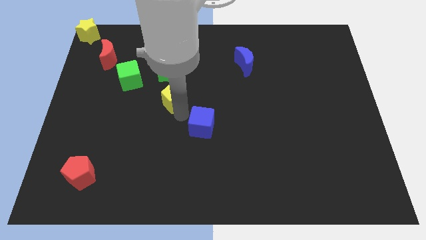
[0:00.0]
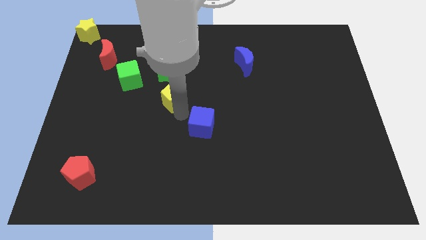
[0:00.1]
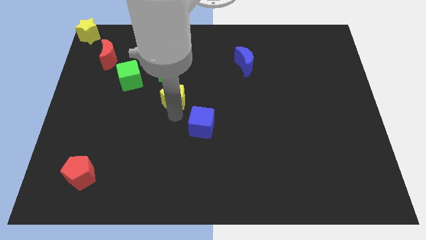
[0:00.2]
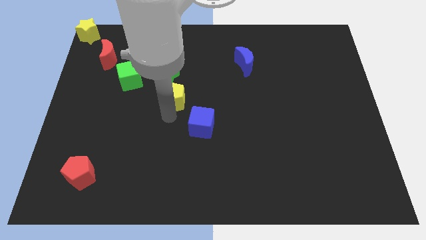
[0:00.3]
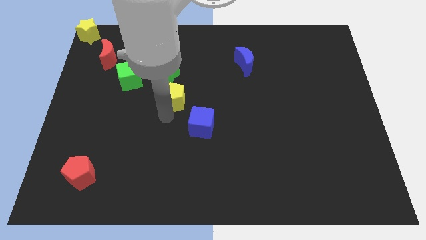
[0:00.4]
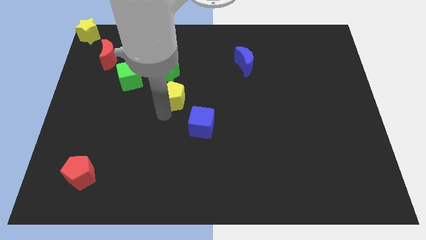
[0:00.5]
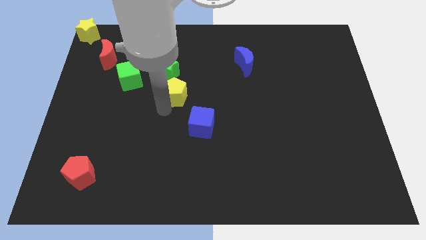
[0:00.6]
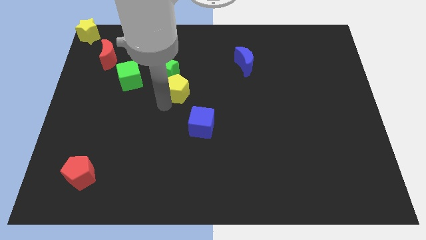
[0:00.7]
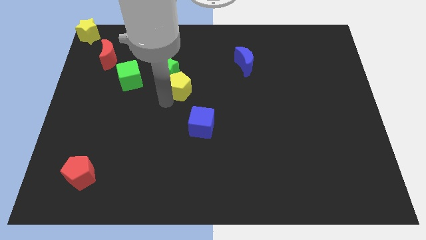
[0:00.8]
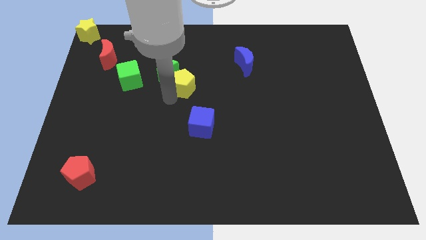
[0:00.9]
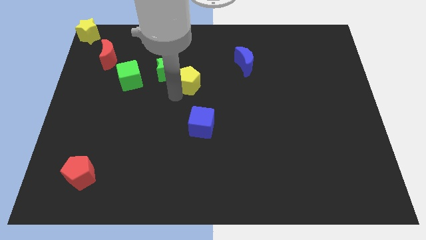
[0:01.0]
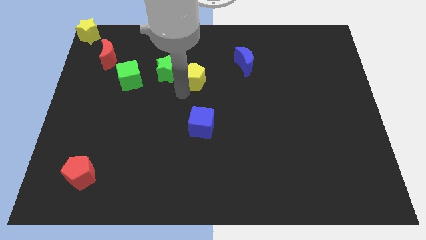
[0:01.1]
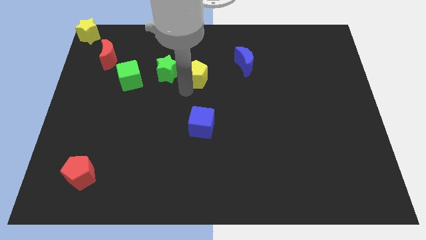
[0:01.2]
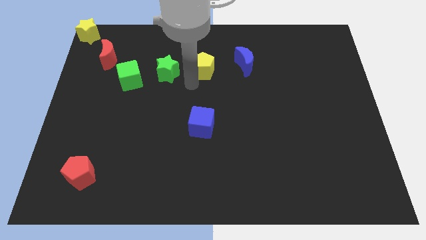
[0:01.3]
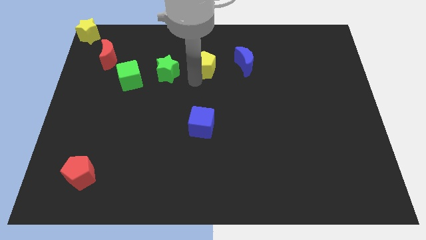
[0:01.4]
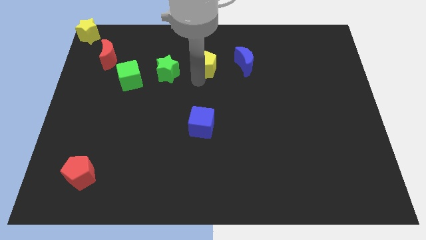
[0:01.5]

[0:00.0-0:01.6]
move the yellow pentagon parallel to the green star

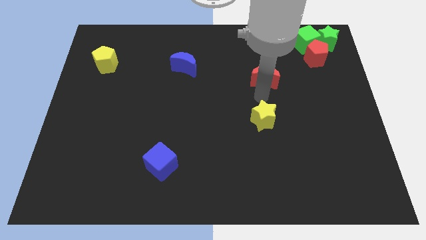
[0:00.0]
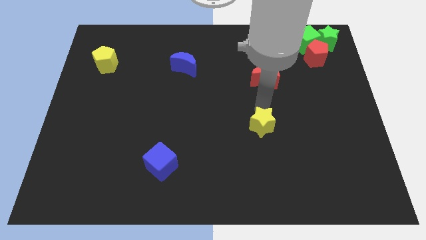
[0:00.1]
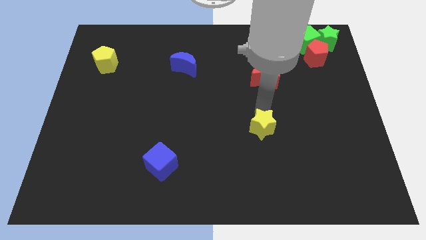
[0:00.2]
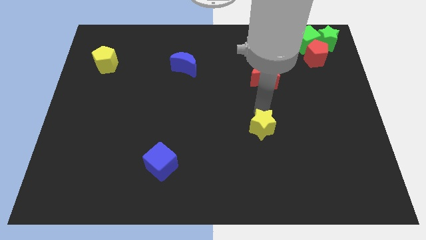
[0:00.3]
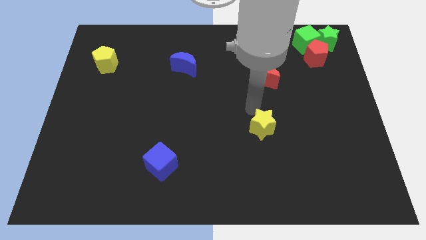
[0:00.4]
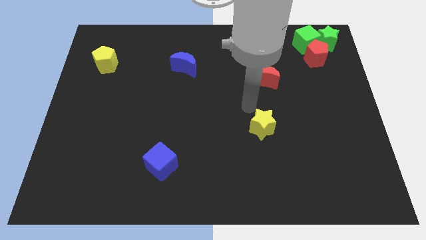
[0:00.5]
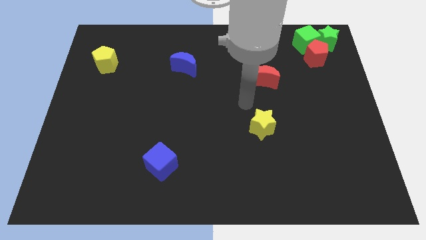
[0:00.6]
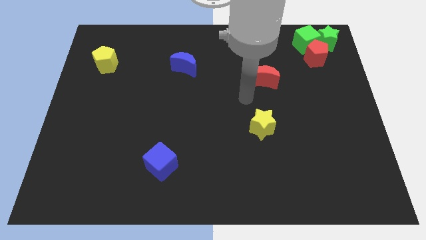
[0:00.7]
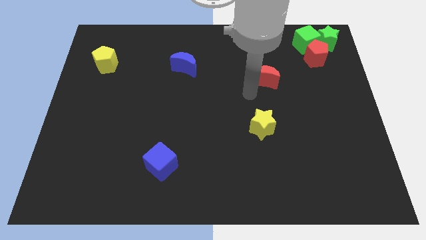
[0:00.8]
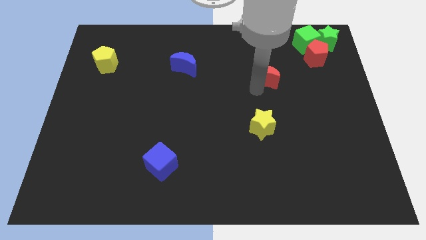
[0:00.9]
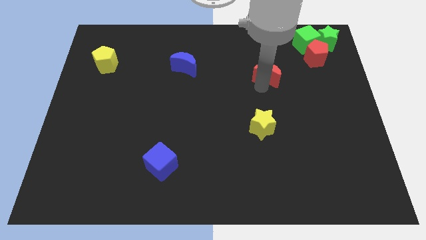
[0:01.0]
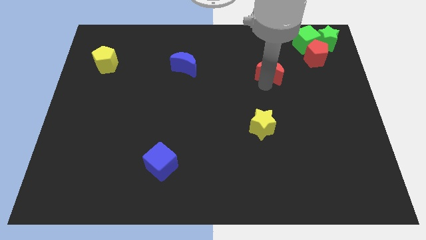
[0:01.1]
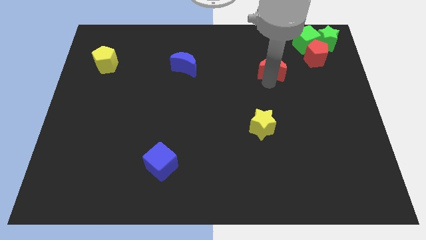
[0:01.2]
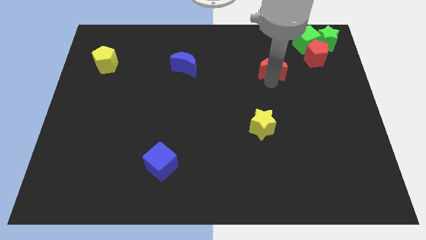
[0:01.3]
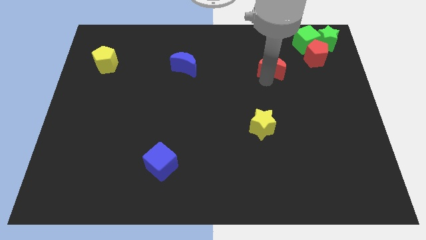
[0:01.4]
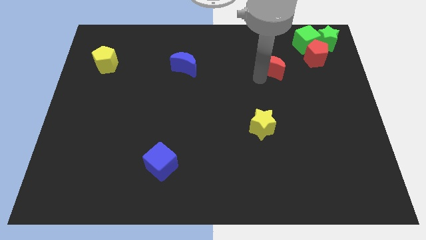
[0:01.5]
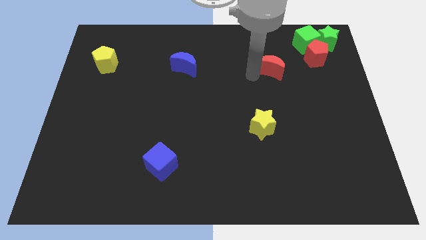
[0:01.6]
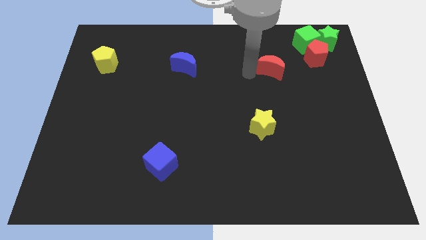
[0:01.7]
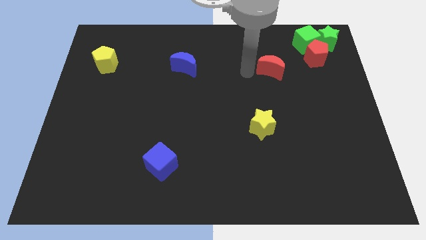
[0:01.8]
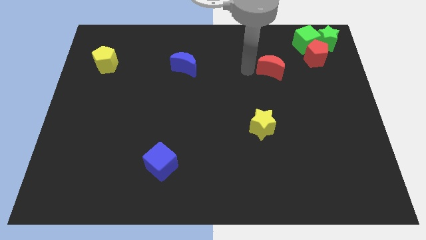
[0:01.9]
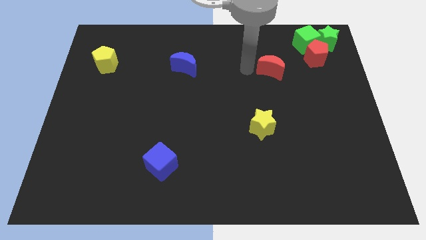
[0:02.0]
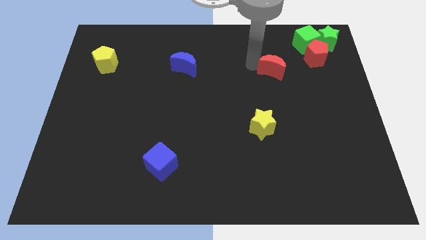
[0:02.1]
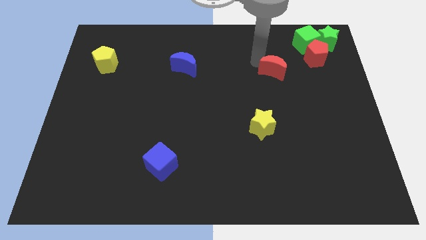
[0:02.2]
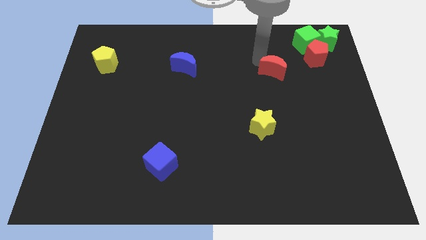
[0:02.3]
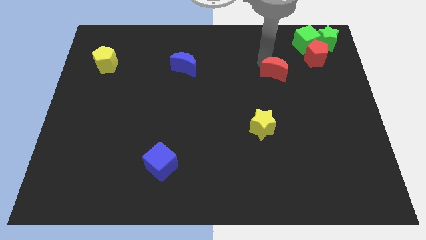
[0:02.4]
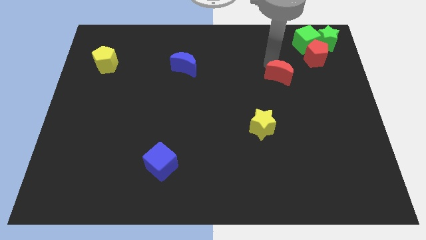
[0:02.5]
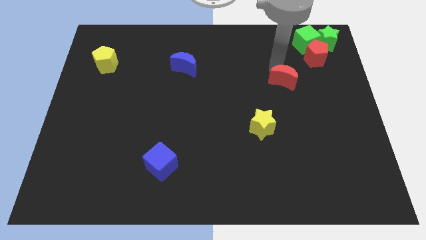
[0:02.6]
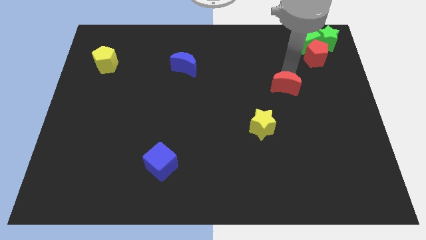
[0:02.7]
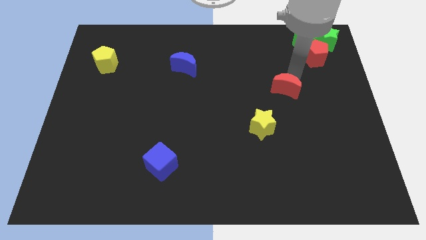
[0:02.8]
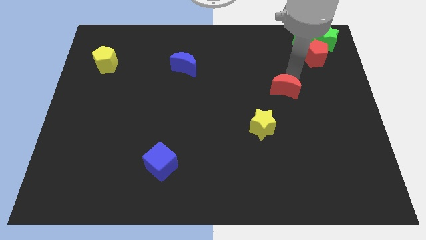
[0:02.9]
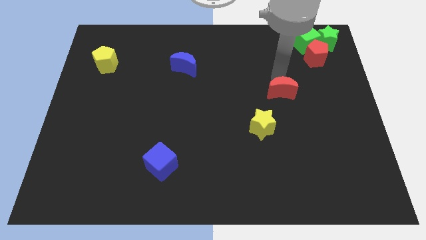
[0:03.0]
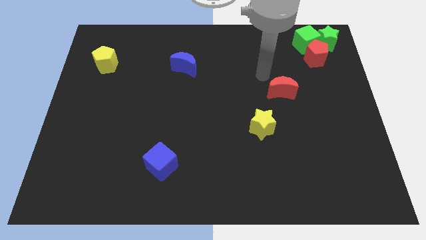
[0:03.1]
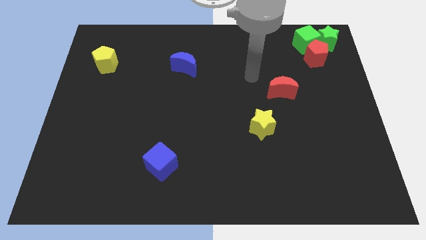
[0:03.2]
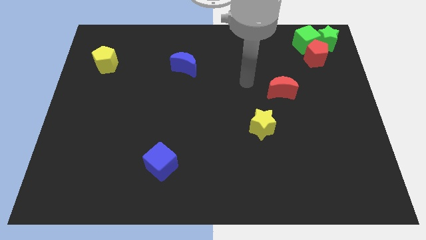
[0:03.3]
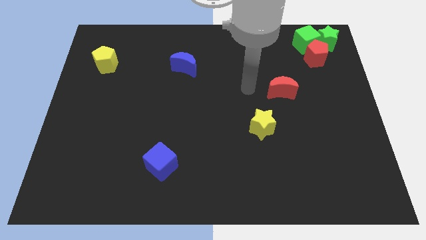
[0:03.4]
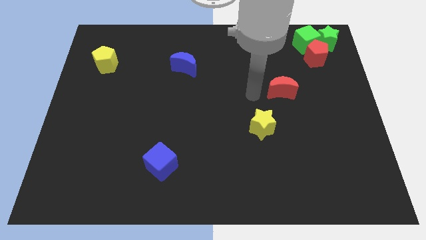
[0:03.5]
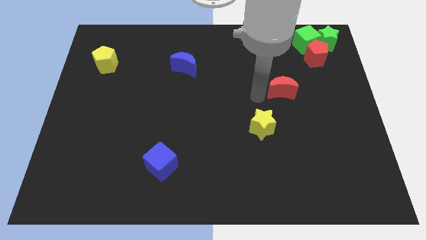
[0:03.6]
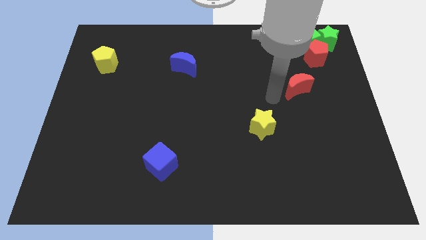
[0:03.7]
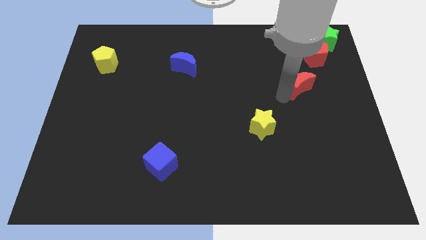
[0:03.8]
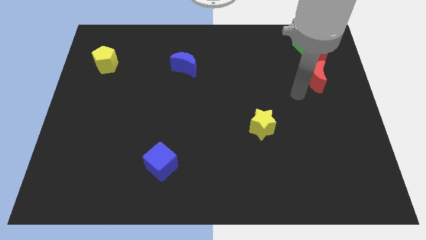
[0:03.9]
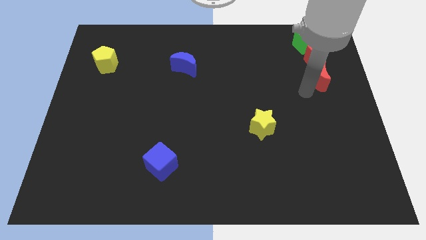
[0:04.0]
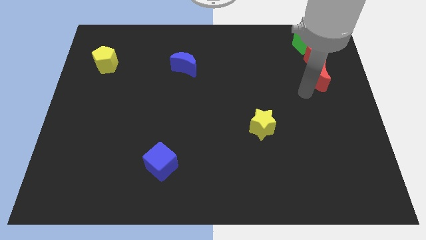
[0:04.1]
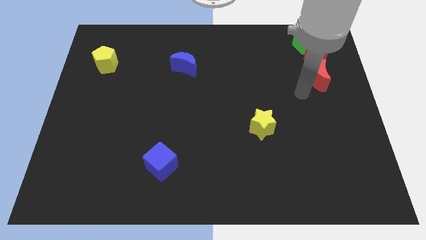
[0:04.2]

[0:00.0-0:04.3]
place the red moon to the bottom of the red pentagon

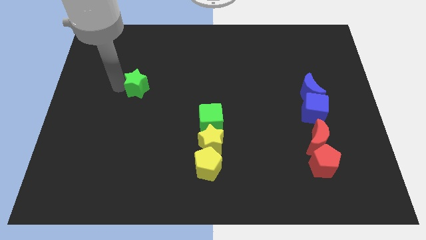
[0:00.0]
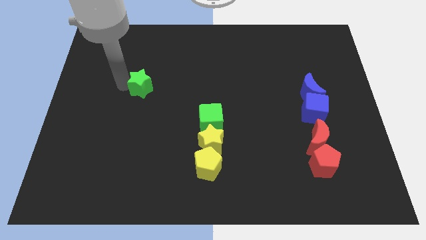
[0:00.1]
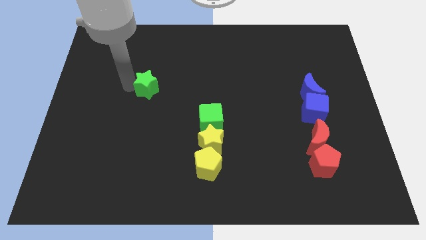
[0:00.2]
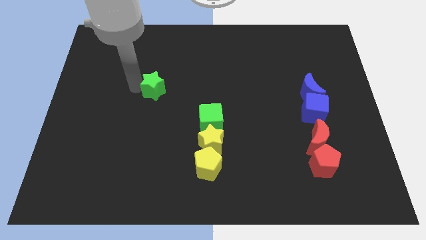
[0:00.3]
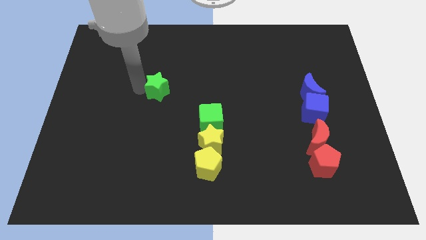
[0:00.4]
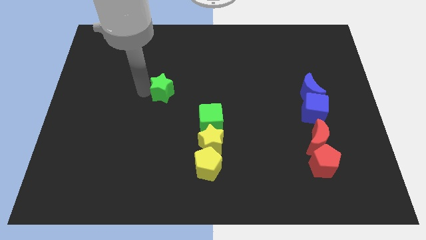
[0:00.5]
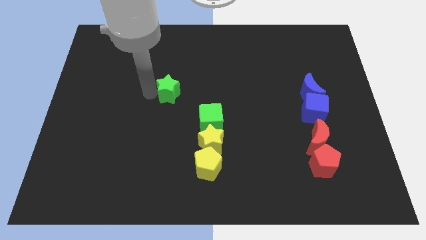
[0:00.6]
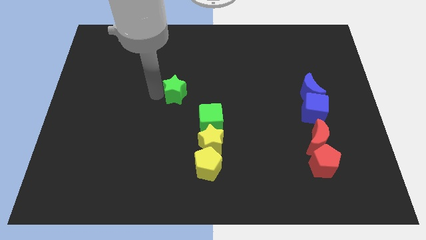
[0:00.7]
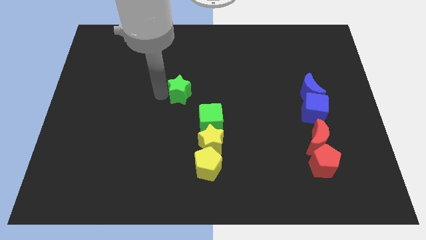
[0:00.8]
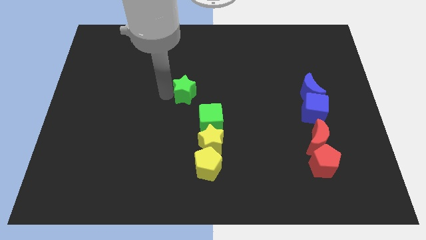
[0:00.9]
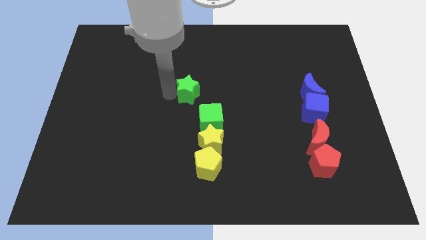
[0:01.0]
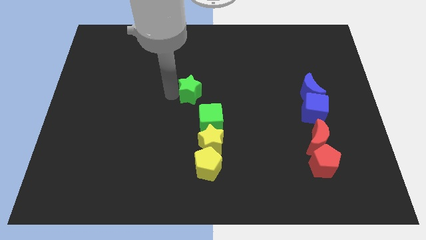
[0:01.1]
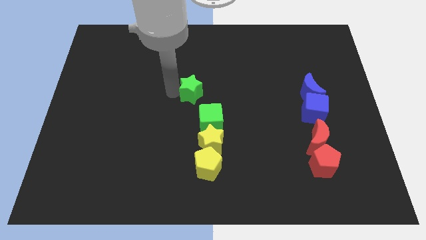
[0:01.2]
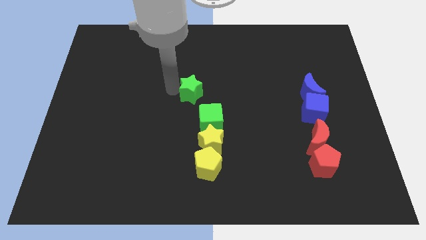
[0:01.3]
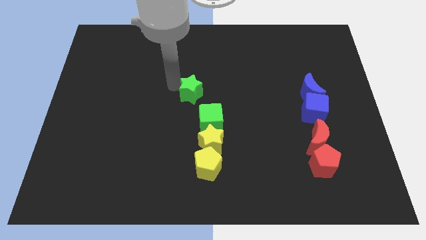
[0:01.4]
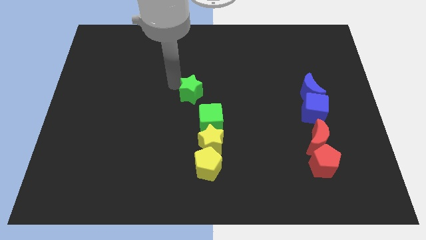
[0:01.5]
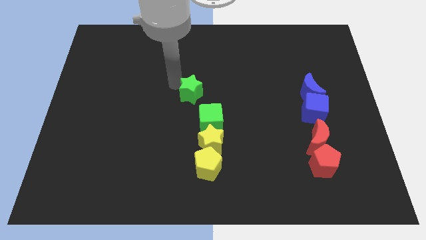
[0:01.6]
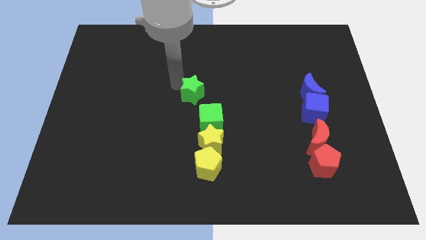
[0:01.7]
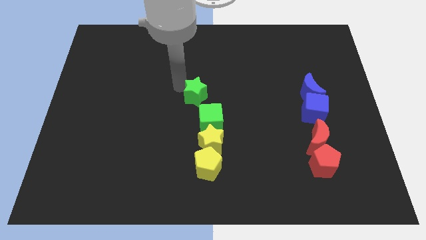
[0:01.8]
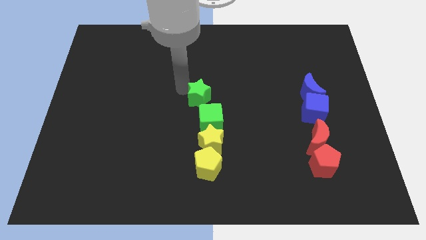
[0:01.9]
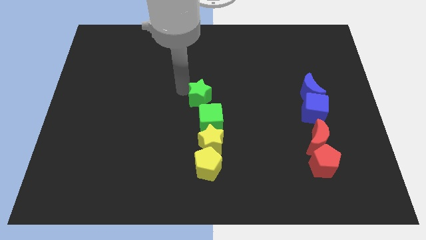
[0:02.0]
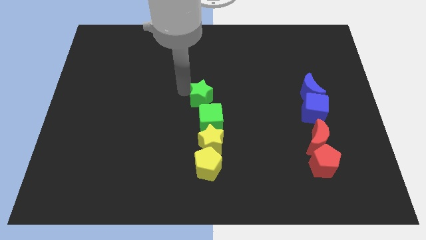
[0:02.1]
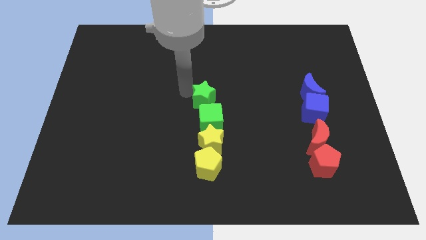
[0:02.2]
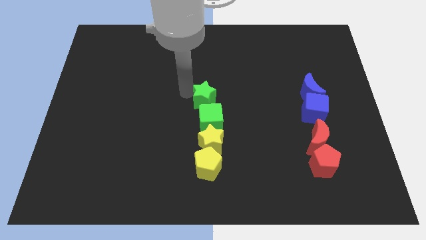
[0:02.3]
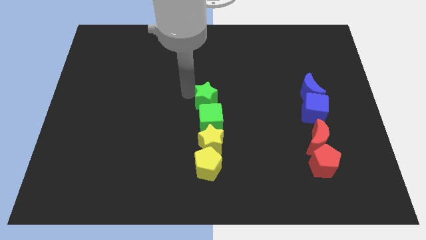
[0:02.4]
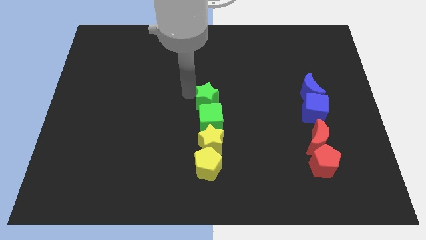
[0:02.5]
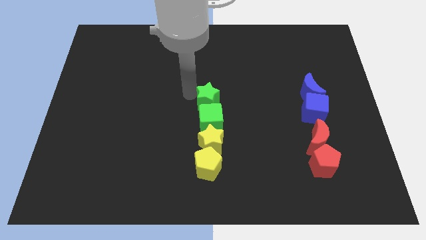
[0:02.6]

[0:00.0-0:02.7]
move the green star towards up side of the green cube

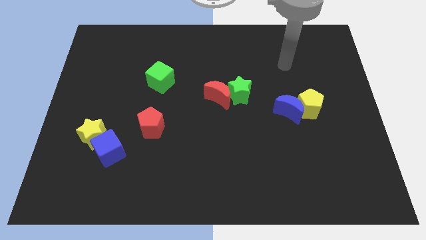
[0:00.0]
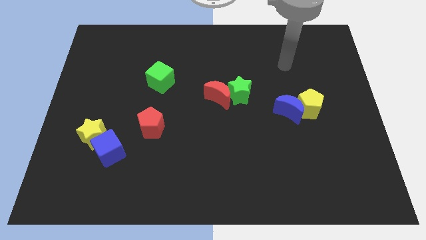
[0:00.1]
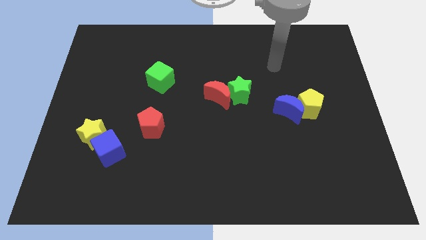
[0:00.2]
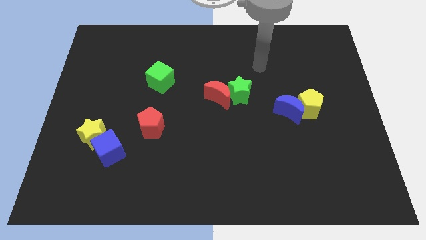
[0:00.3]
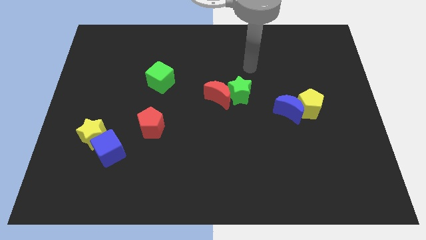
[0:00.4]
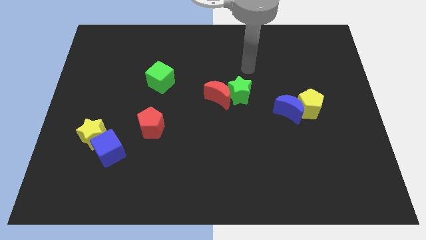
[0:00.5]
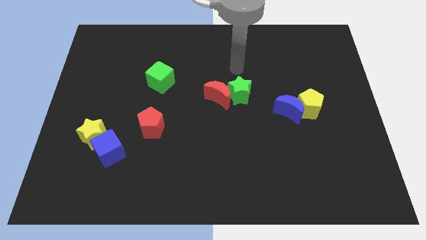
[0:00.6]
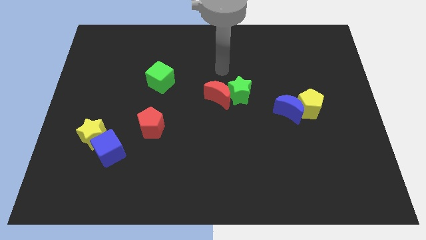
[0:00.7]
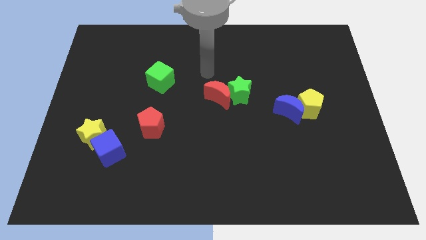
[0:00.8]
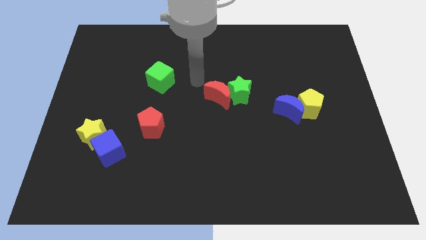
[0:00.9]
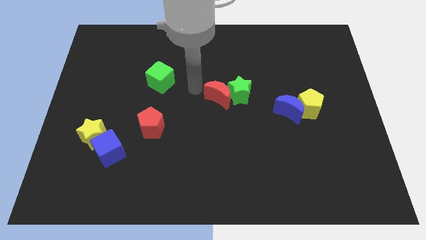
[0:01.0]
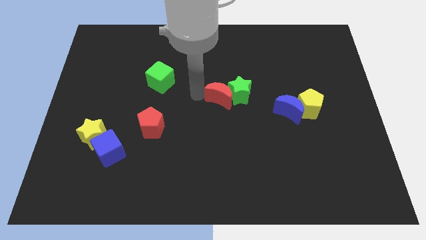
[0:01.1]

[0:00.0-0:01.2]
place arm in between red moon and green cube
